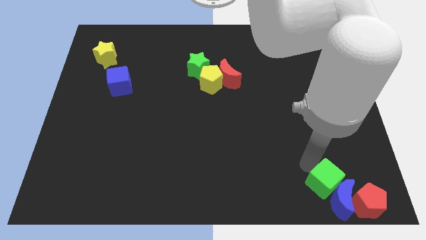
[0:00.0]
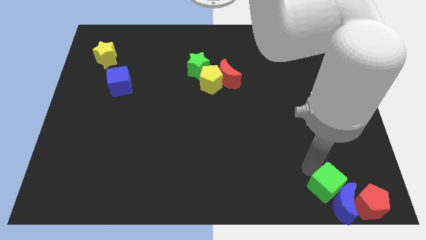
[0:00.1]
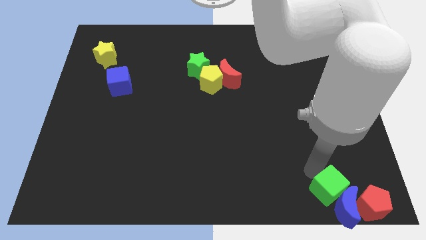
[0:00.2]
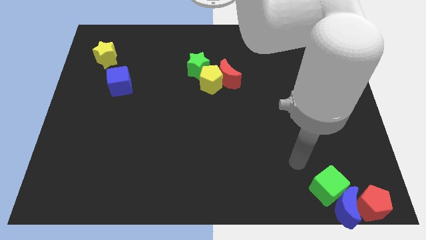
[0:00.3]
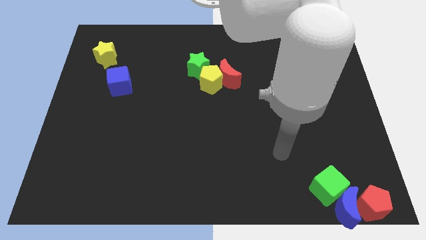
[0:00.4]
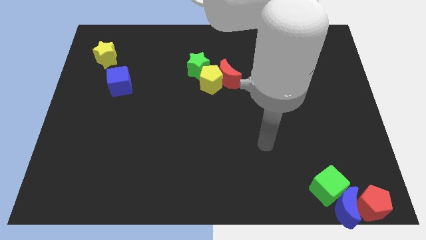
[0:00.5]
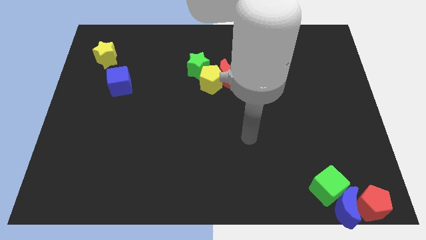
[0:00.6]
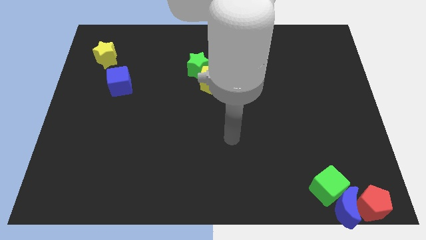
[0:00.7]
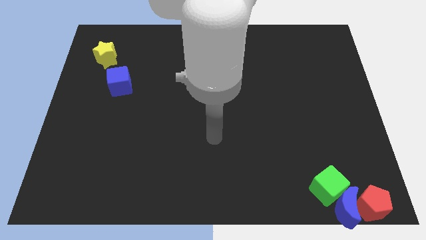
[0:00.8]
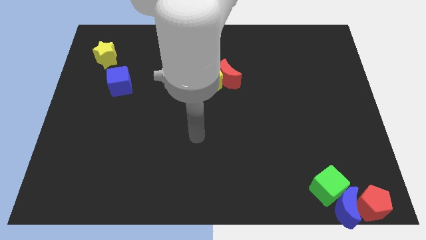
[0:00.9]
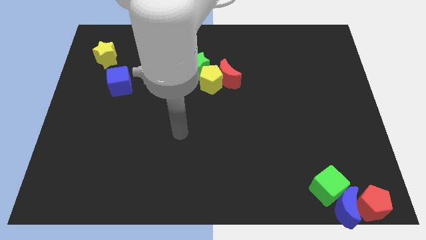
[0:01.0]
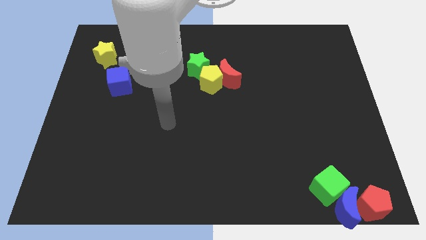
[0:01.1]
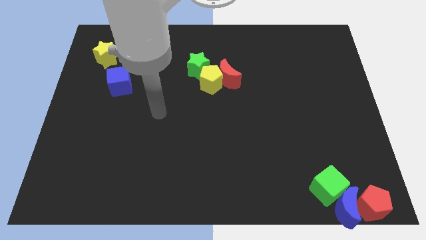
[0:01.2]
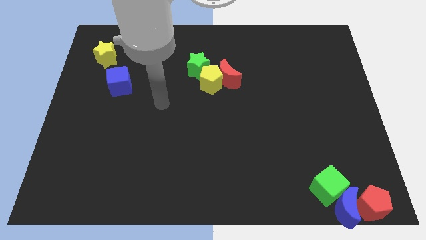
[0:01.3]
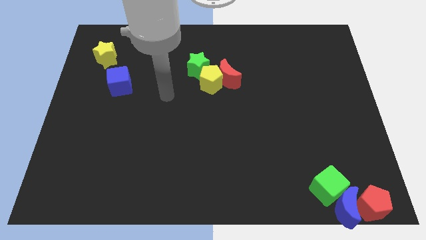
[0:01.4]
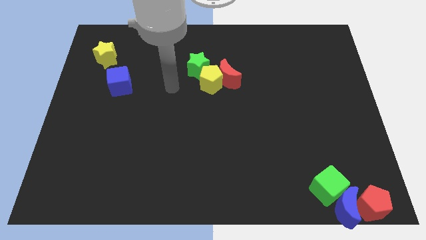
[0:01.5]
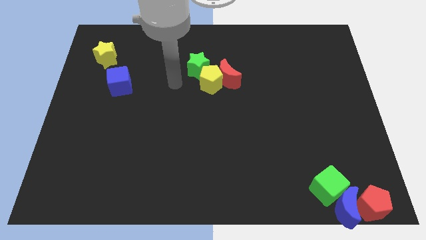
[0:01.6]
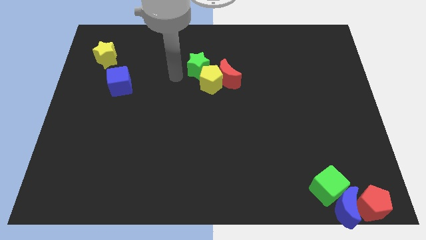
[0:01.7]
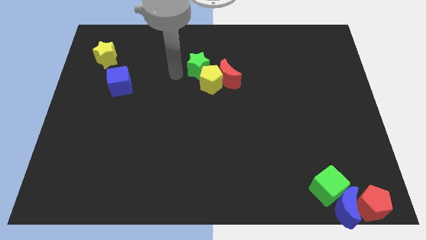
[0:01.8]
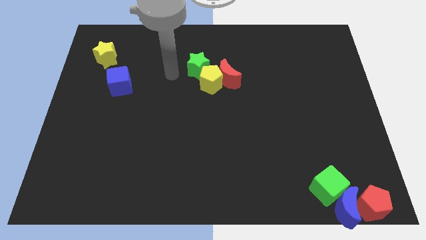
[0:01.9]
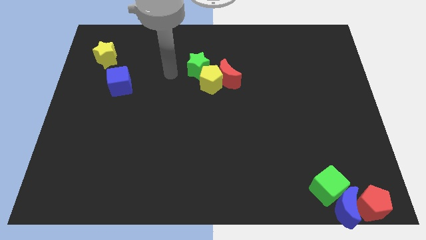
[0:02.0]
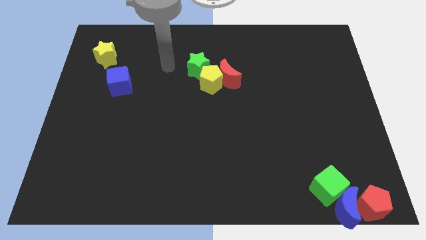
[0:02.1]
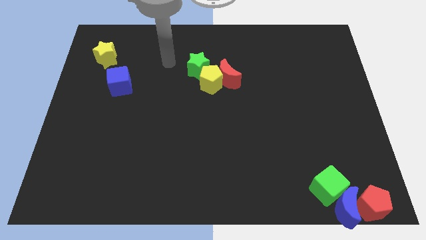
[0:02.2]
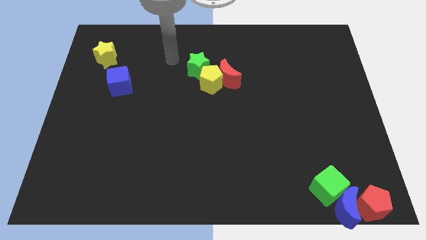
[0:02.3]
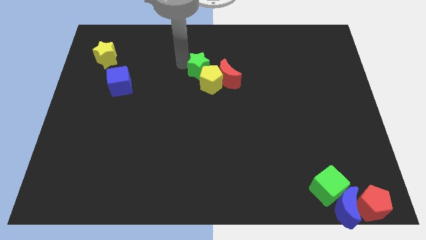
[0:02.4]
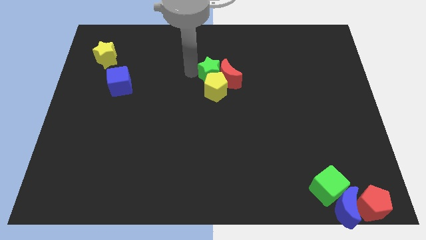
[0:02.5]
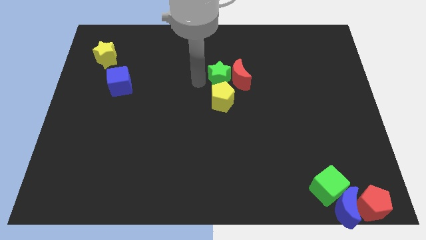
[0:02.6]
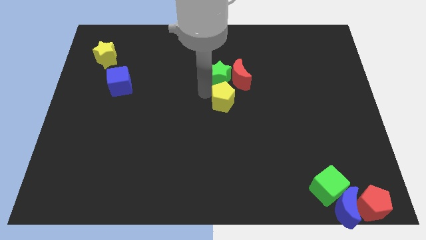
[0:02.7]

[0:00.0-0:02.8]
push the green star to the top of the yellow pentagon

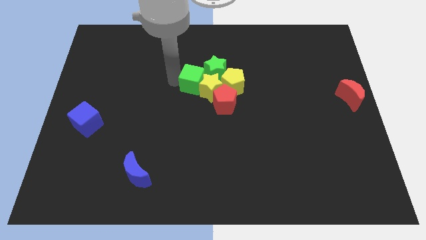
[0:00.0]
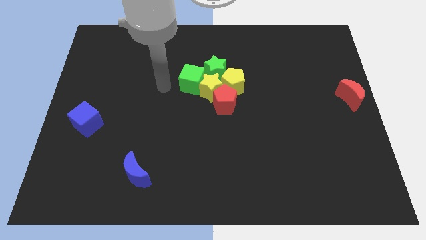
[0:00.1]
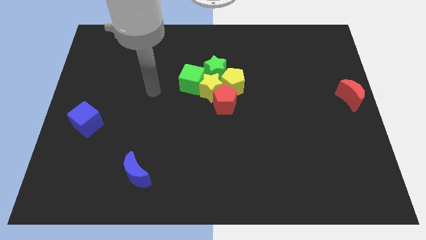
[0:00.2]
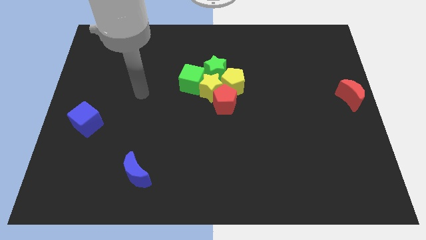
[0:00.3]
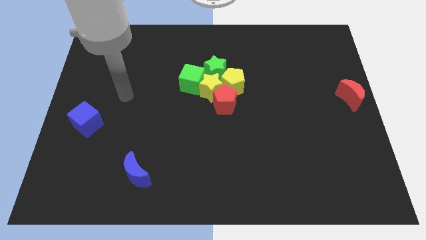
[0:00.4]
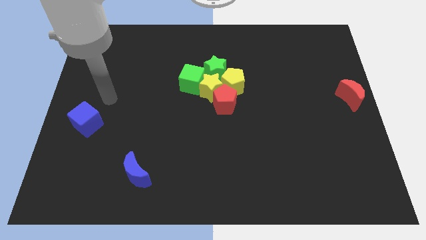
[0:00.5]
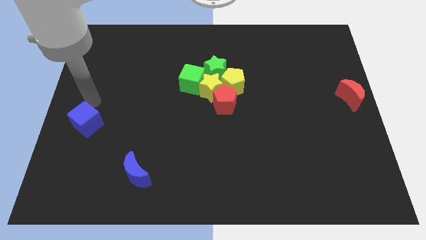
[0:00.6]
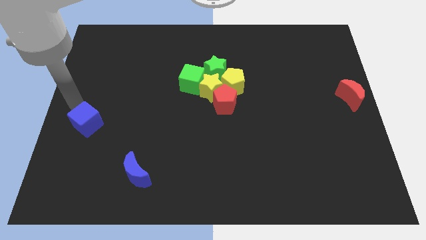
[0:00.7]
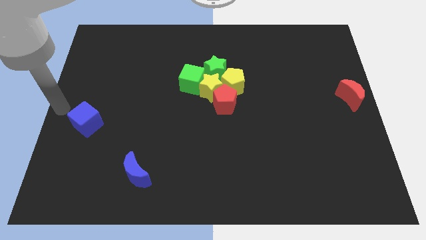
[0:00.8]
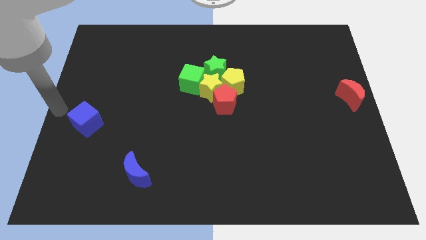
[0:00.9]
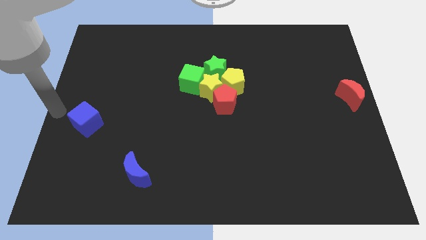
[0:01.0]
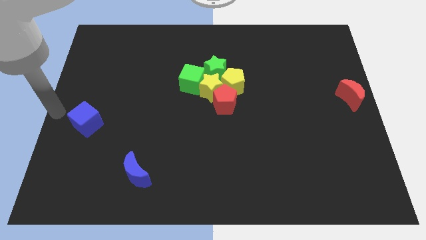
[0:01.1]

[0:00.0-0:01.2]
place your arm to the top left of blue cube

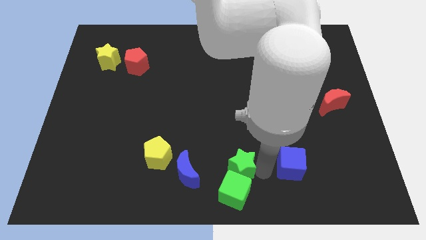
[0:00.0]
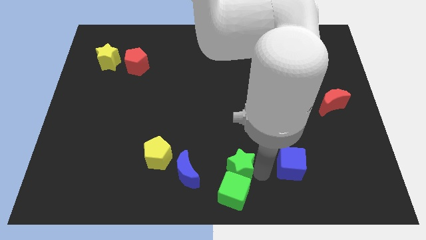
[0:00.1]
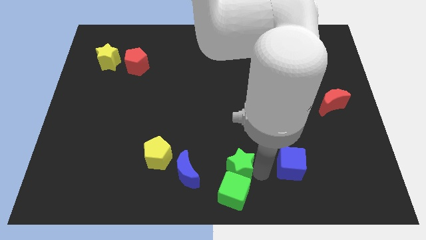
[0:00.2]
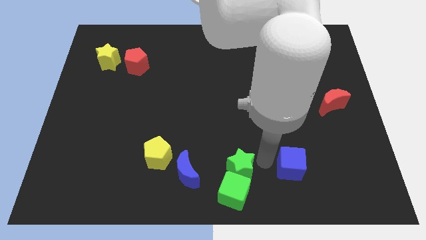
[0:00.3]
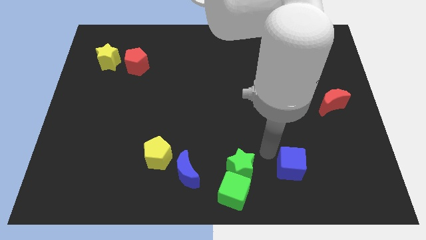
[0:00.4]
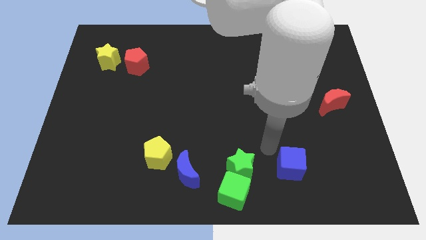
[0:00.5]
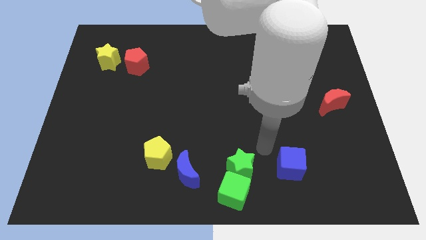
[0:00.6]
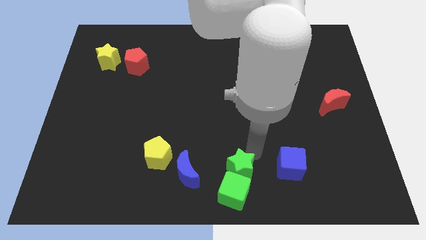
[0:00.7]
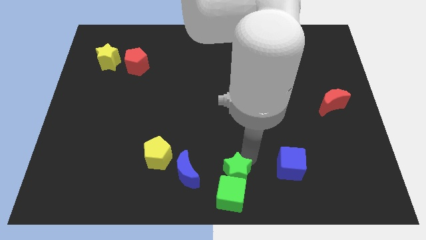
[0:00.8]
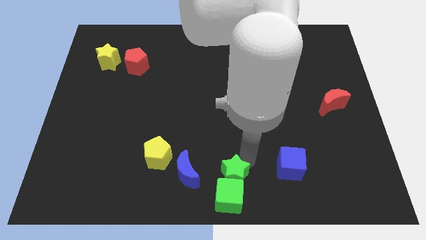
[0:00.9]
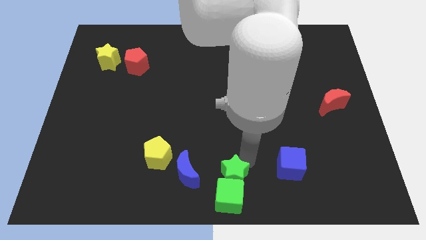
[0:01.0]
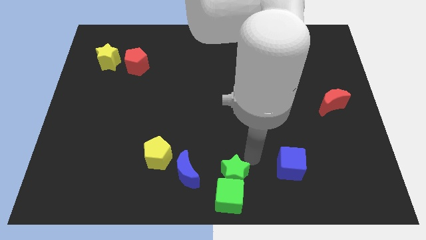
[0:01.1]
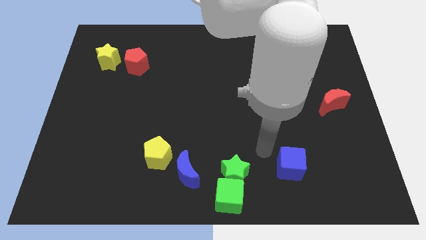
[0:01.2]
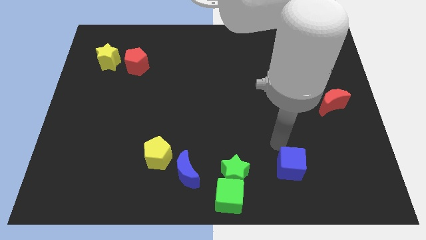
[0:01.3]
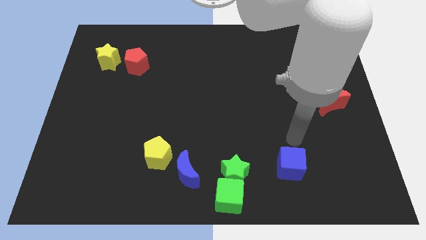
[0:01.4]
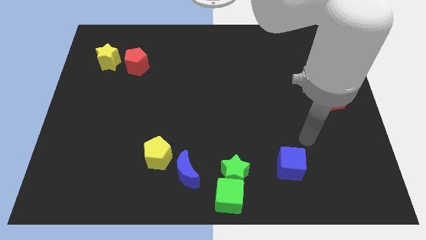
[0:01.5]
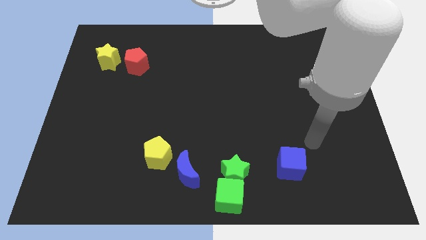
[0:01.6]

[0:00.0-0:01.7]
slide green star and green cube to the bottom center

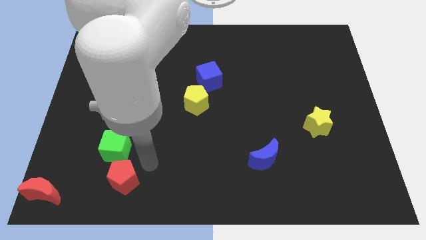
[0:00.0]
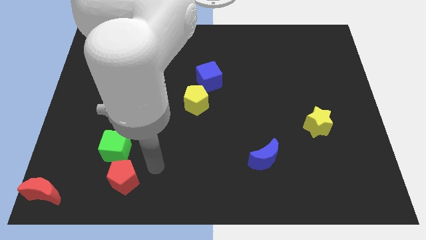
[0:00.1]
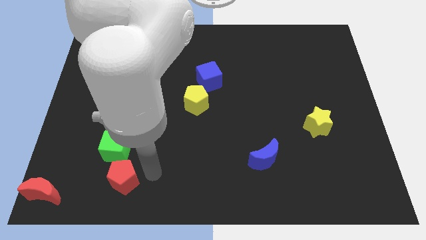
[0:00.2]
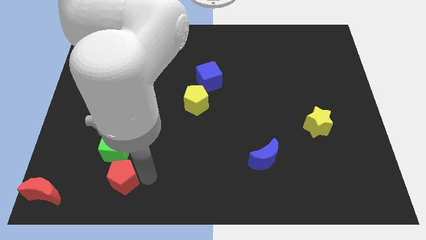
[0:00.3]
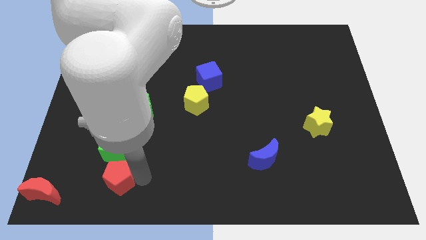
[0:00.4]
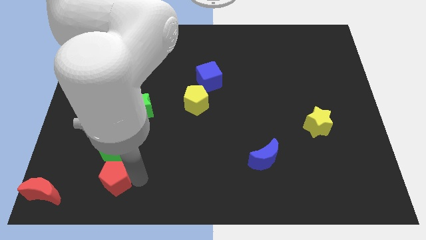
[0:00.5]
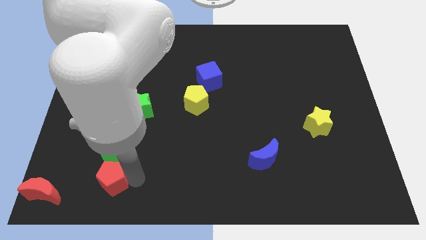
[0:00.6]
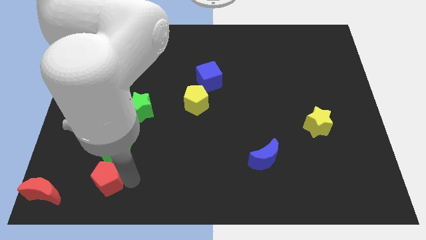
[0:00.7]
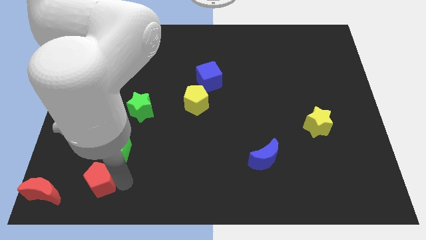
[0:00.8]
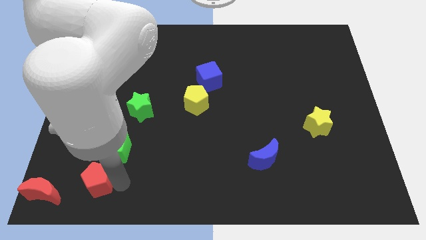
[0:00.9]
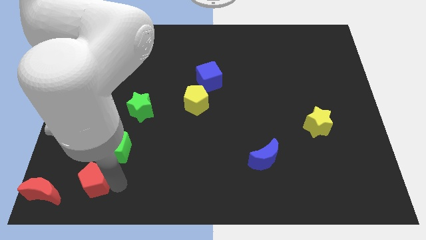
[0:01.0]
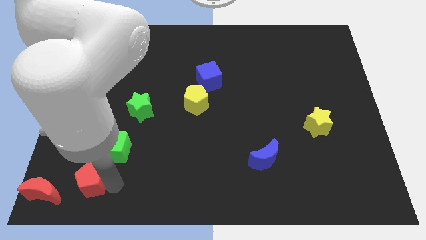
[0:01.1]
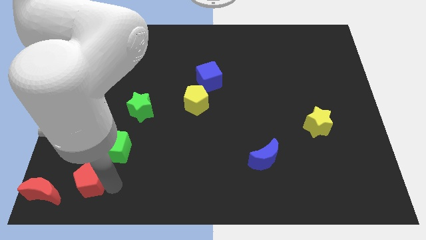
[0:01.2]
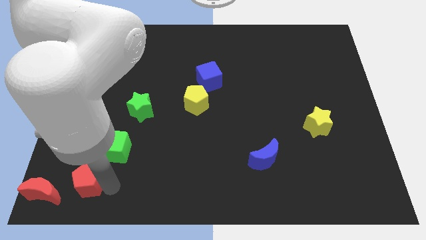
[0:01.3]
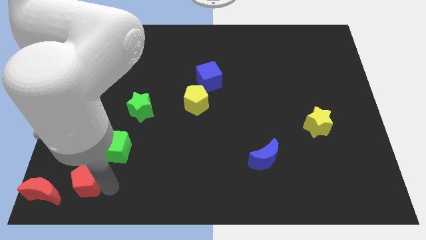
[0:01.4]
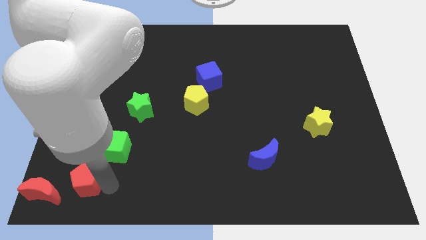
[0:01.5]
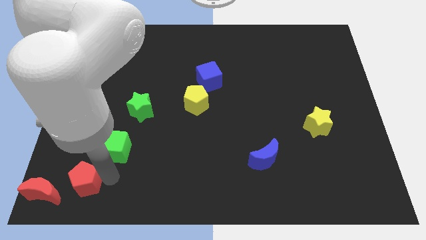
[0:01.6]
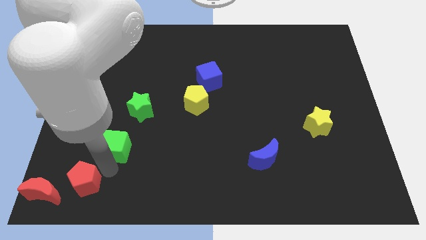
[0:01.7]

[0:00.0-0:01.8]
slide the red pentagon towards the red moon

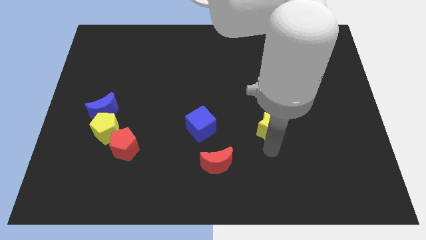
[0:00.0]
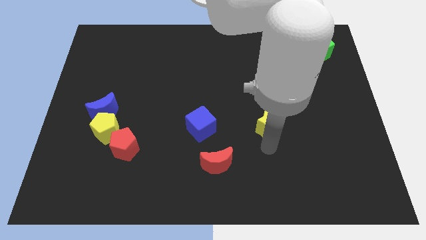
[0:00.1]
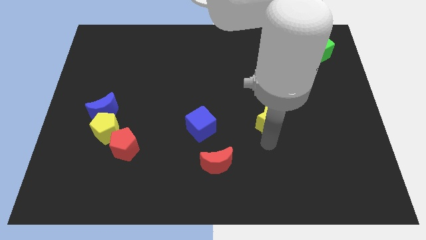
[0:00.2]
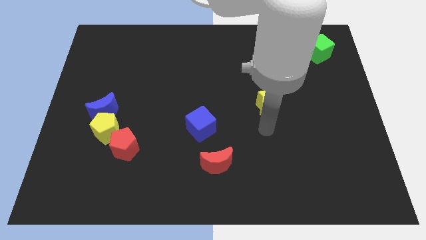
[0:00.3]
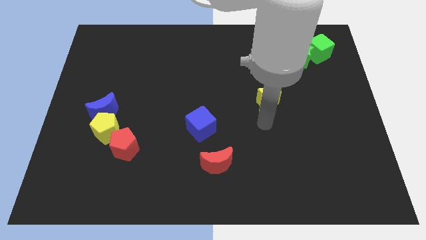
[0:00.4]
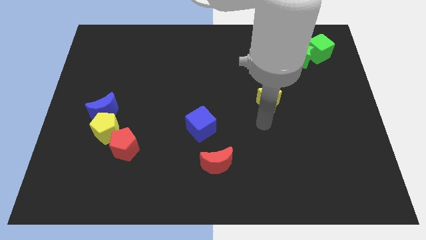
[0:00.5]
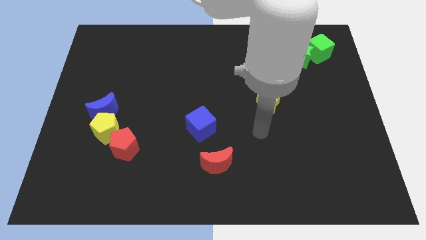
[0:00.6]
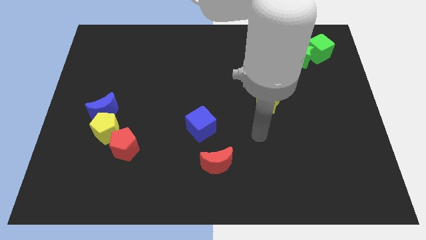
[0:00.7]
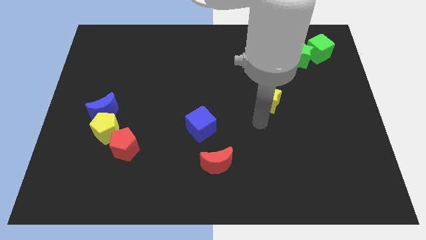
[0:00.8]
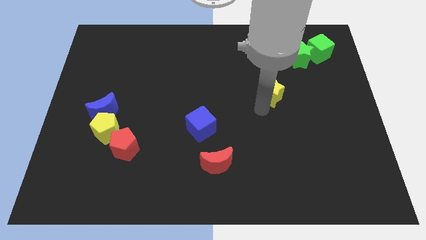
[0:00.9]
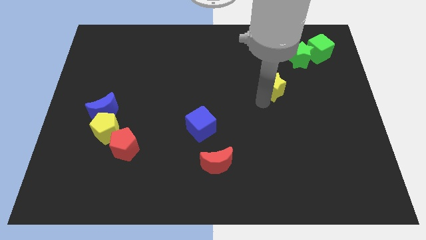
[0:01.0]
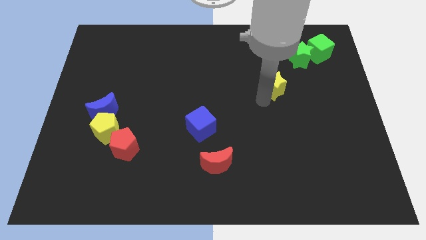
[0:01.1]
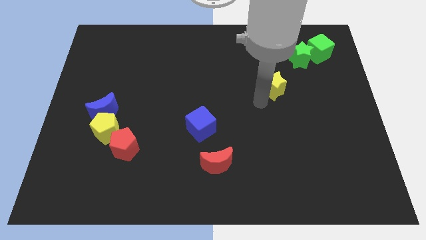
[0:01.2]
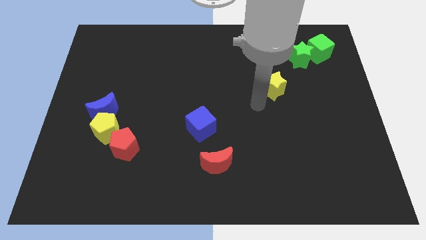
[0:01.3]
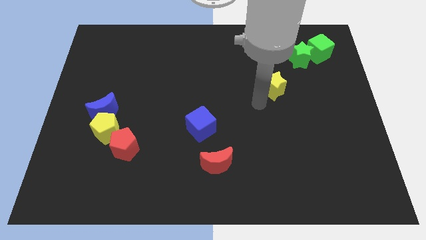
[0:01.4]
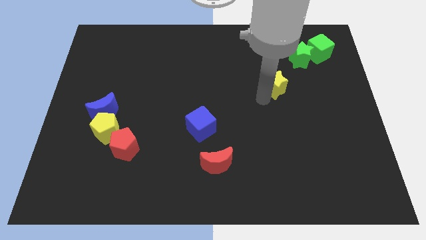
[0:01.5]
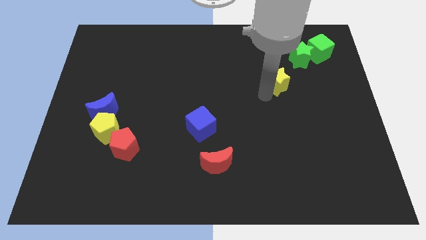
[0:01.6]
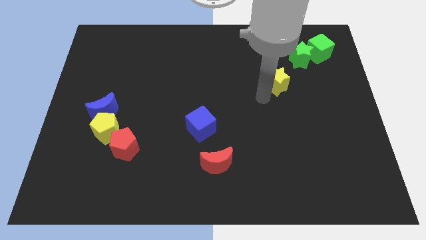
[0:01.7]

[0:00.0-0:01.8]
push the yellow star towards the green star
